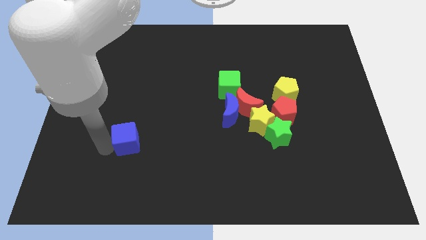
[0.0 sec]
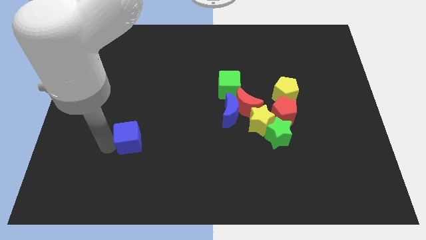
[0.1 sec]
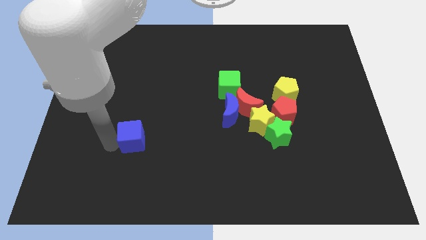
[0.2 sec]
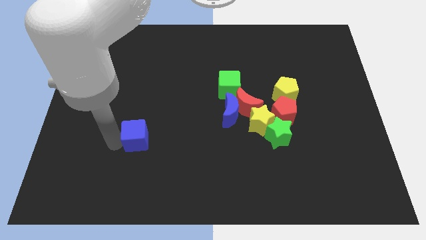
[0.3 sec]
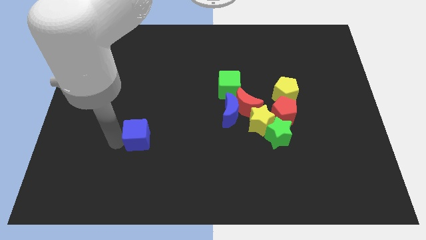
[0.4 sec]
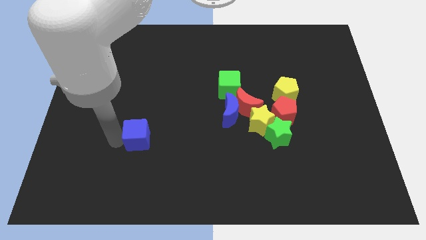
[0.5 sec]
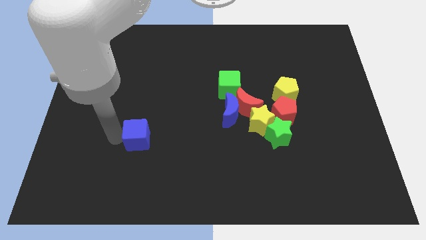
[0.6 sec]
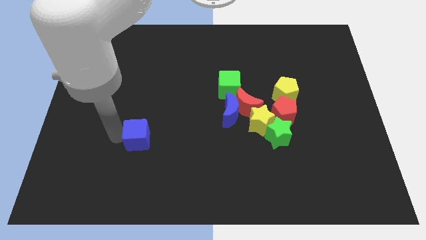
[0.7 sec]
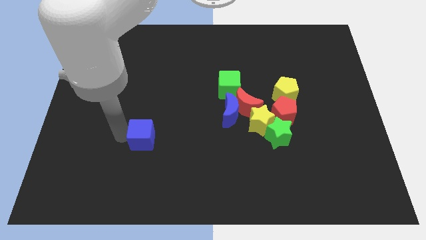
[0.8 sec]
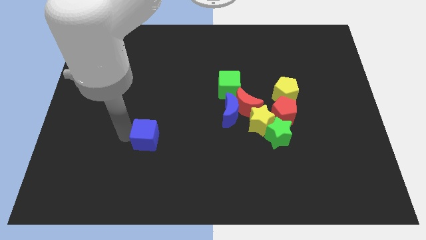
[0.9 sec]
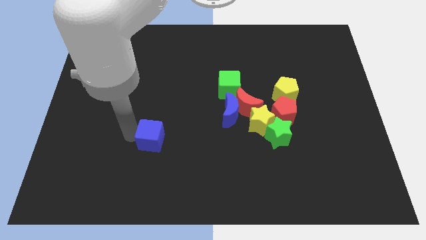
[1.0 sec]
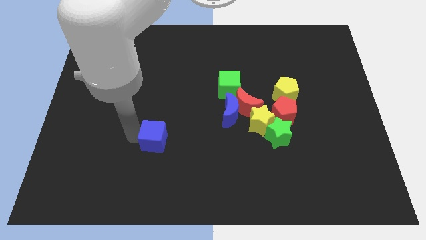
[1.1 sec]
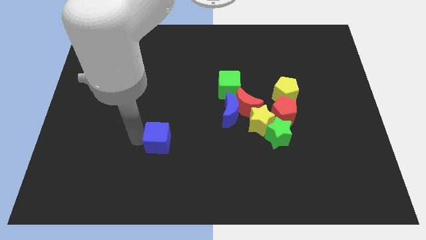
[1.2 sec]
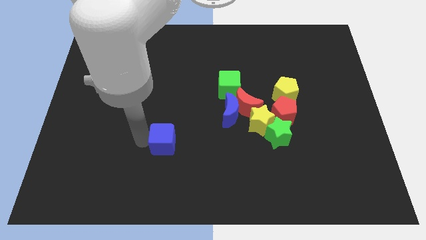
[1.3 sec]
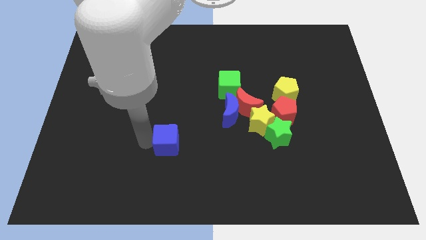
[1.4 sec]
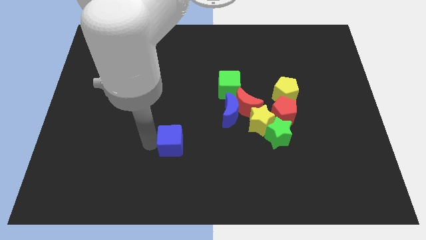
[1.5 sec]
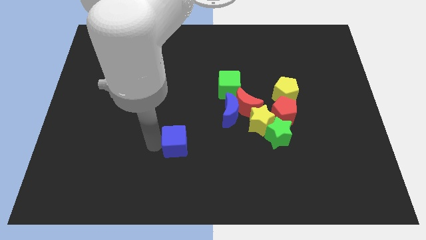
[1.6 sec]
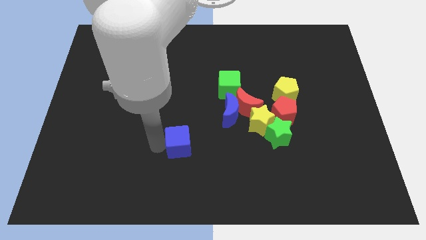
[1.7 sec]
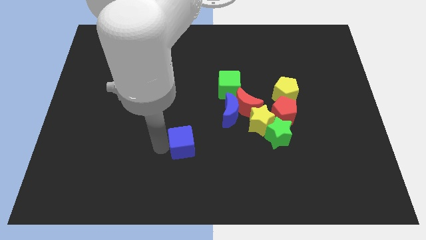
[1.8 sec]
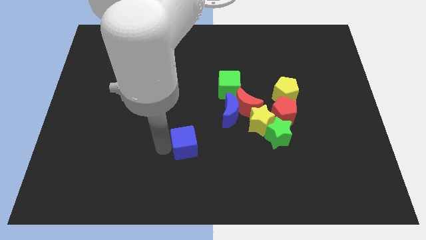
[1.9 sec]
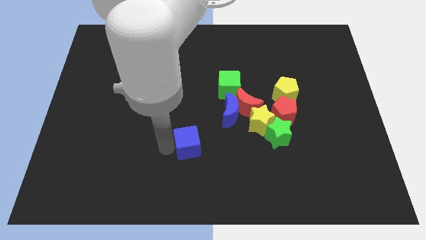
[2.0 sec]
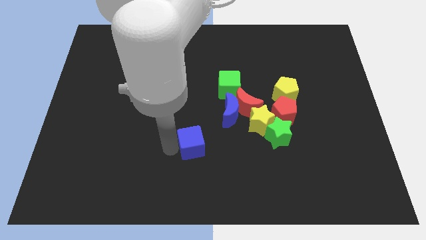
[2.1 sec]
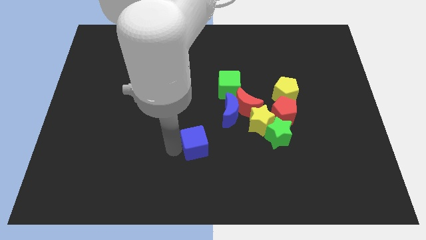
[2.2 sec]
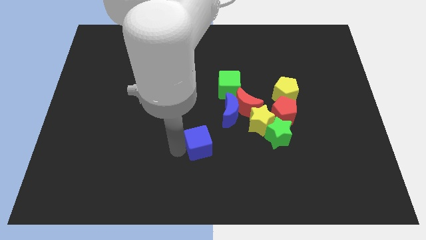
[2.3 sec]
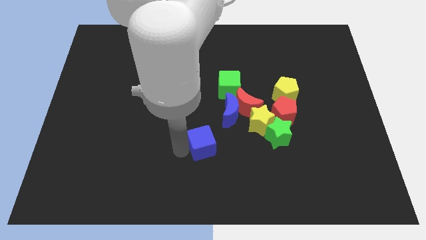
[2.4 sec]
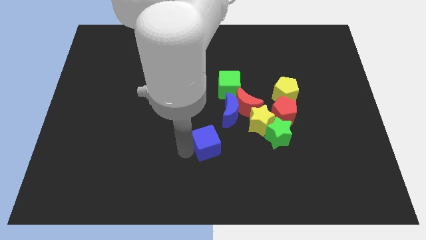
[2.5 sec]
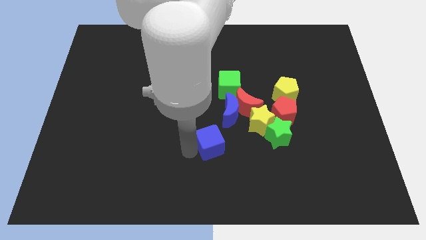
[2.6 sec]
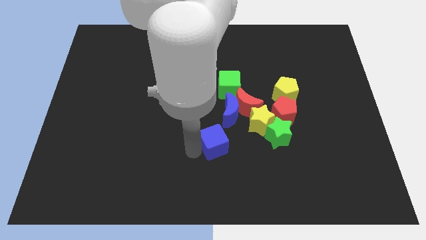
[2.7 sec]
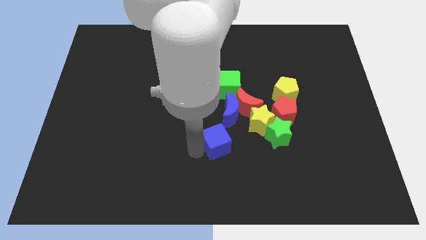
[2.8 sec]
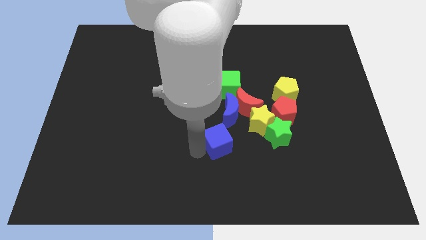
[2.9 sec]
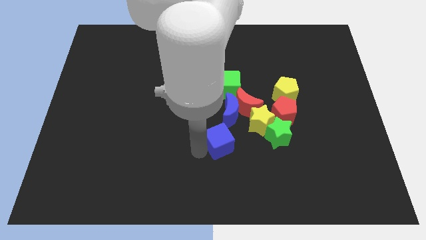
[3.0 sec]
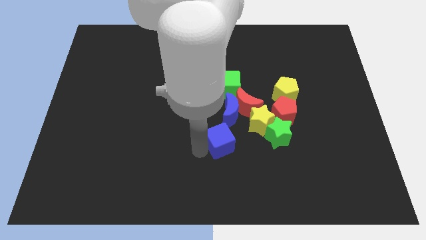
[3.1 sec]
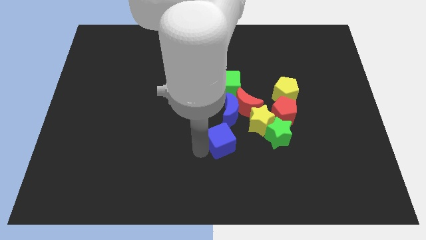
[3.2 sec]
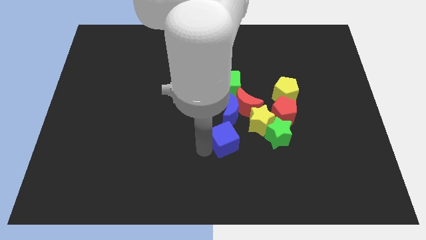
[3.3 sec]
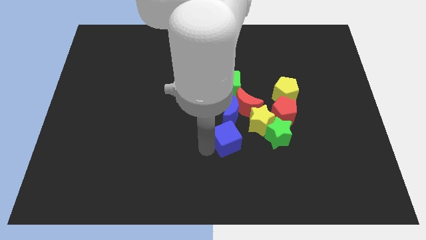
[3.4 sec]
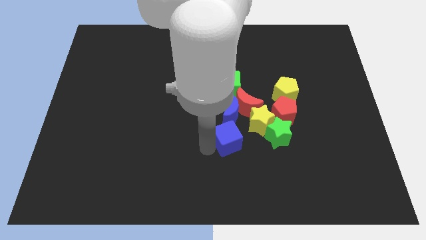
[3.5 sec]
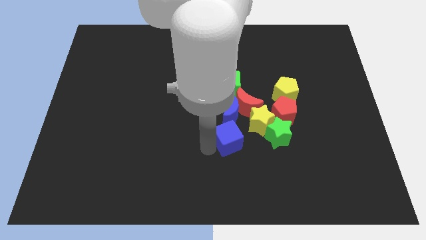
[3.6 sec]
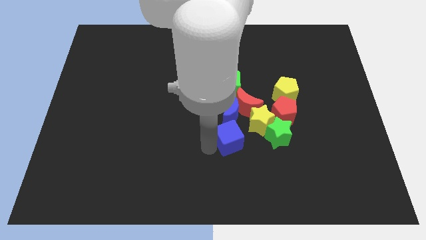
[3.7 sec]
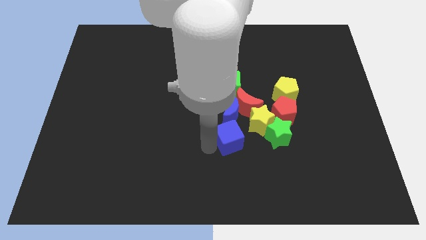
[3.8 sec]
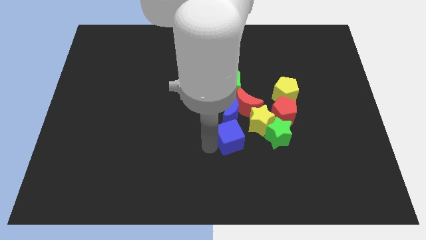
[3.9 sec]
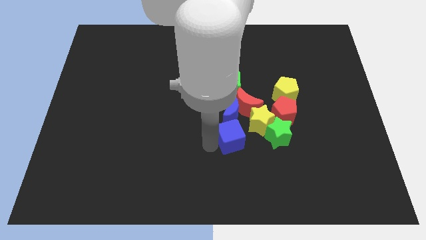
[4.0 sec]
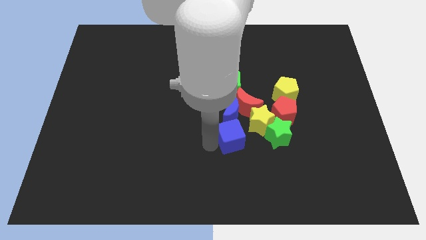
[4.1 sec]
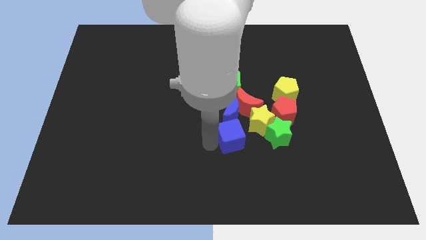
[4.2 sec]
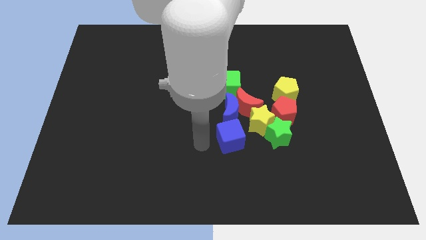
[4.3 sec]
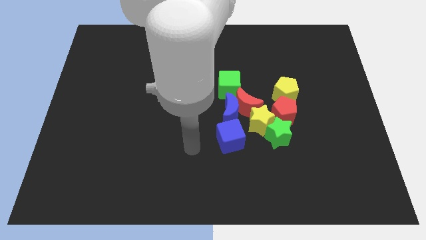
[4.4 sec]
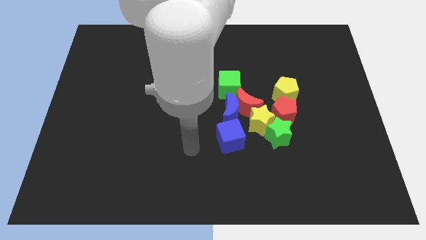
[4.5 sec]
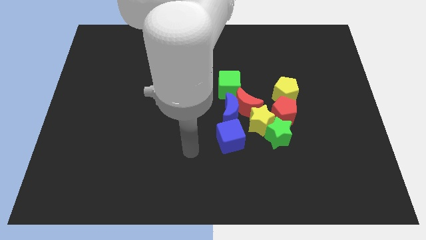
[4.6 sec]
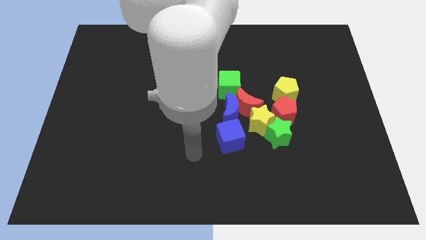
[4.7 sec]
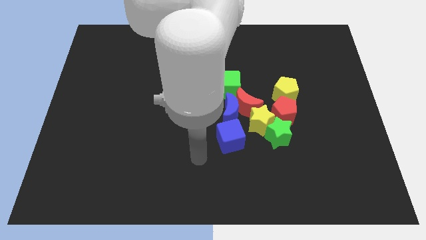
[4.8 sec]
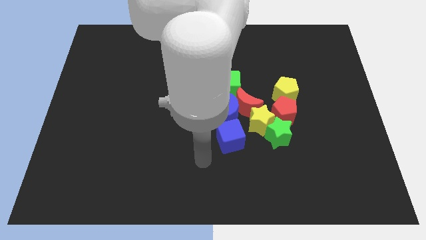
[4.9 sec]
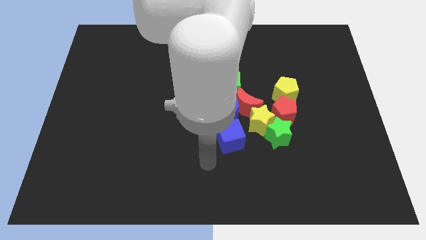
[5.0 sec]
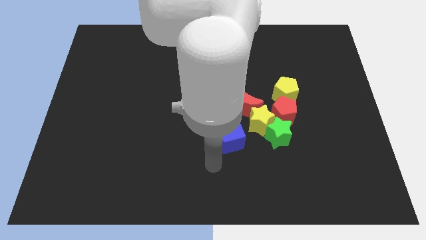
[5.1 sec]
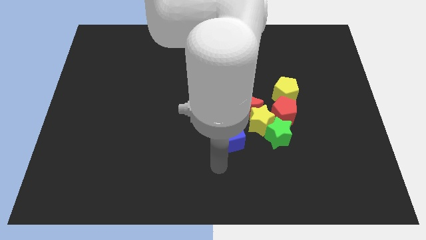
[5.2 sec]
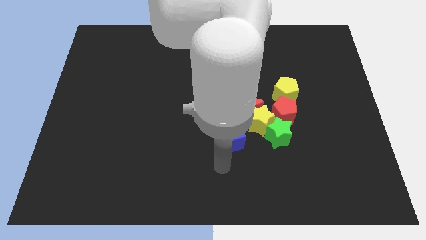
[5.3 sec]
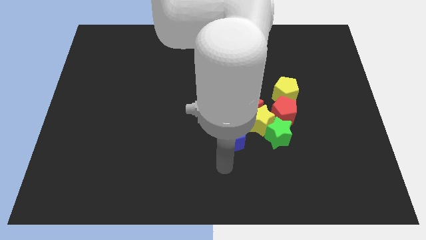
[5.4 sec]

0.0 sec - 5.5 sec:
push the blue cube to the bottom of the blue crescent

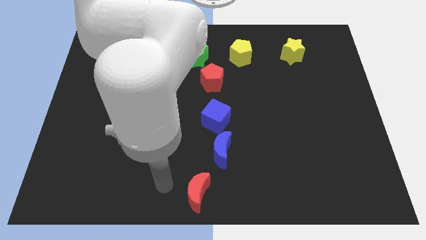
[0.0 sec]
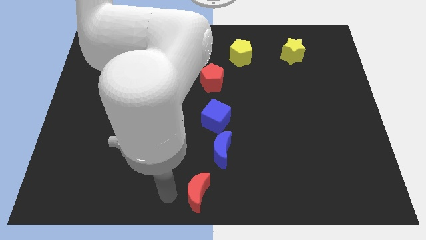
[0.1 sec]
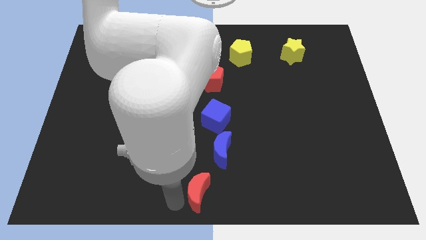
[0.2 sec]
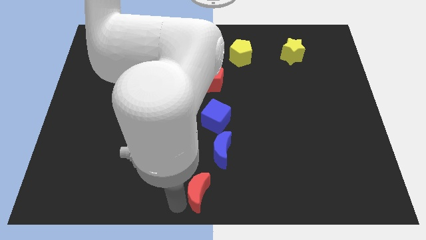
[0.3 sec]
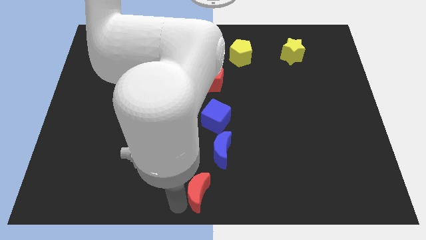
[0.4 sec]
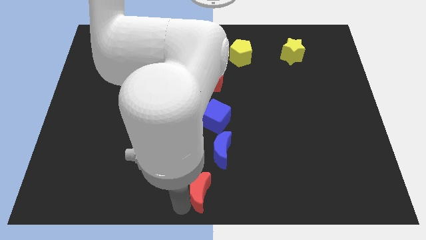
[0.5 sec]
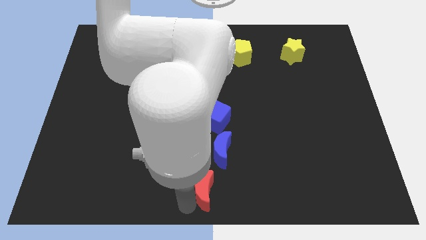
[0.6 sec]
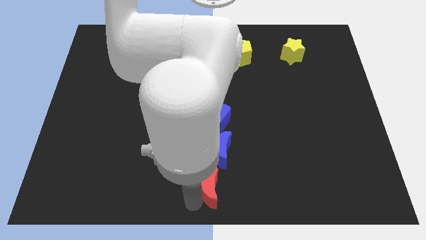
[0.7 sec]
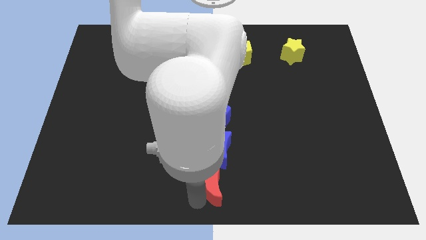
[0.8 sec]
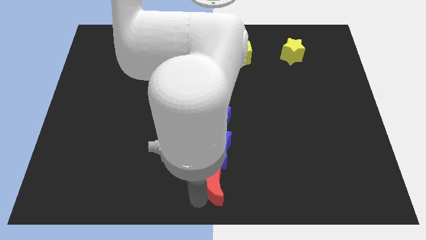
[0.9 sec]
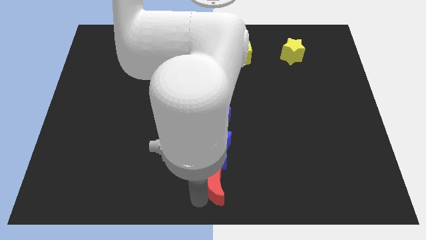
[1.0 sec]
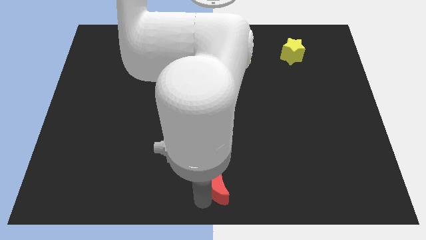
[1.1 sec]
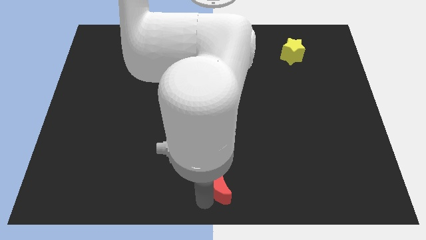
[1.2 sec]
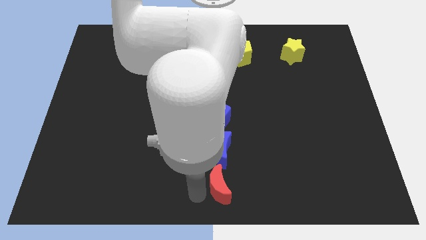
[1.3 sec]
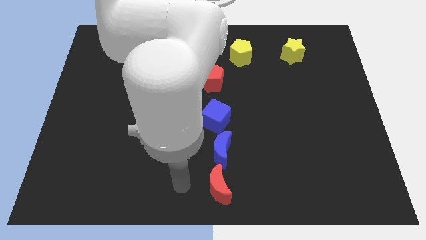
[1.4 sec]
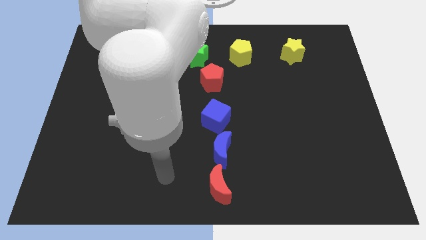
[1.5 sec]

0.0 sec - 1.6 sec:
push the red moon to the bottom of blue moon

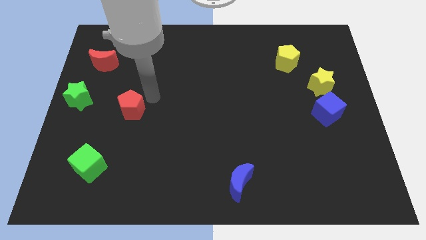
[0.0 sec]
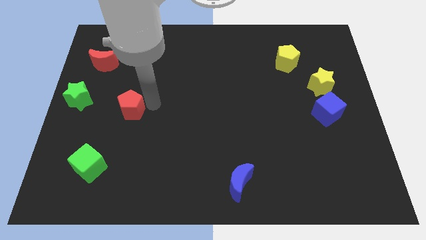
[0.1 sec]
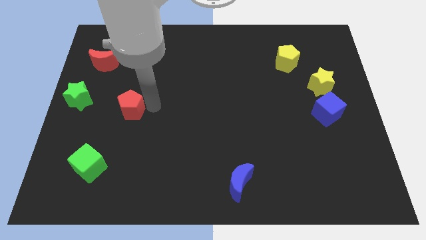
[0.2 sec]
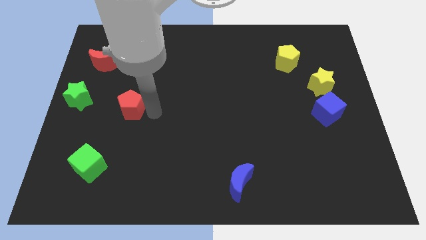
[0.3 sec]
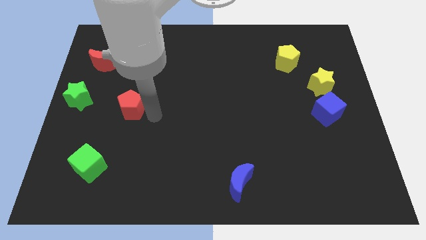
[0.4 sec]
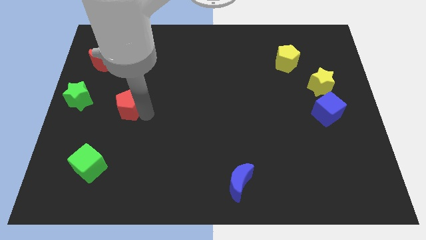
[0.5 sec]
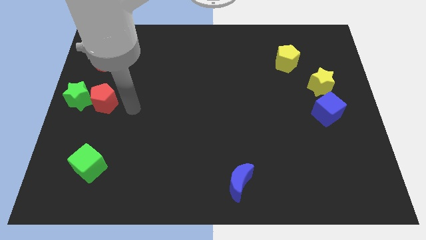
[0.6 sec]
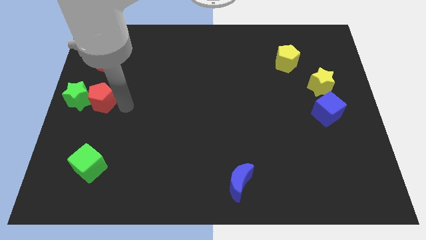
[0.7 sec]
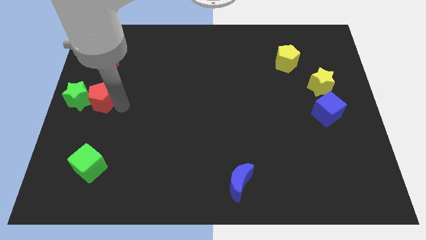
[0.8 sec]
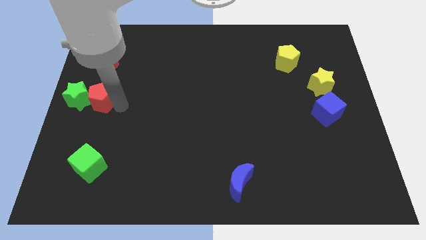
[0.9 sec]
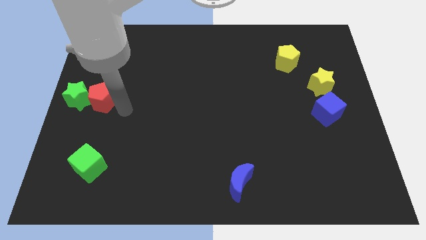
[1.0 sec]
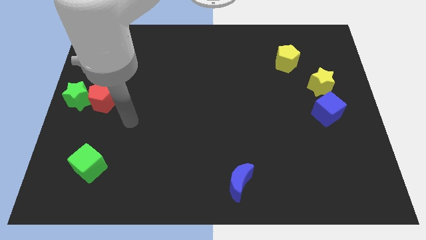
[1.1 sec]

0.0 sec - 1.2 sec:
attach the red pentagon to the green star

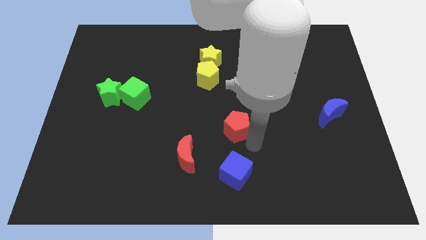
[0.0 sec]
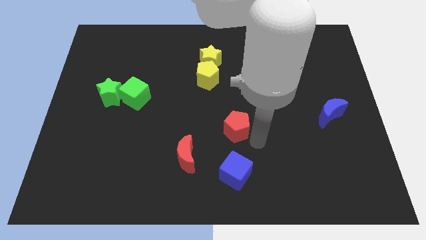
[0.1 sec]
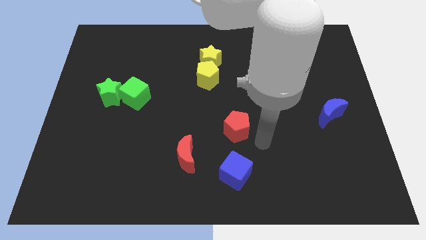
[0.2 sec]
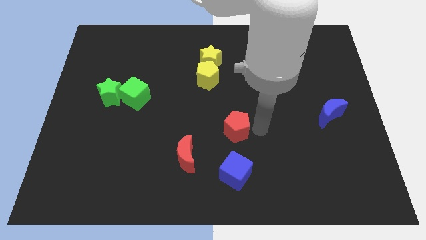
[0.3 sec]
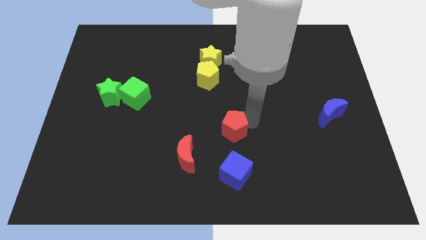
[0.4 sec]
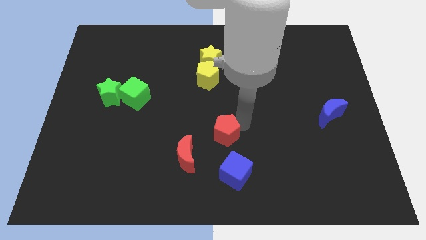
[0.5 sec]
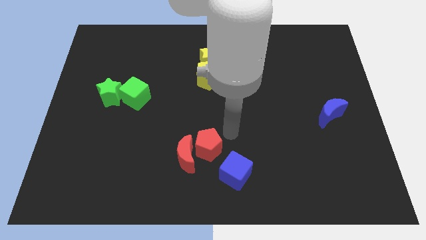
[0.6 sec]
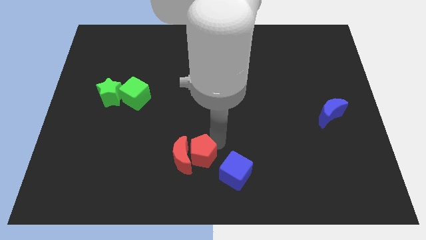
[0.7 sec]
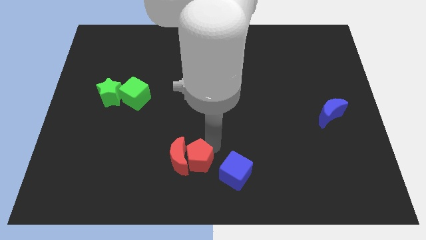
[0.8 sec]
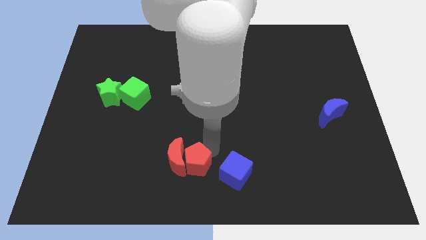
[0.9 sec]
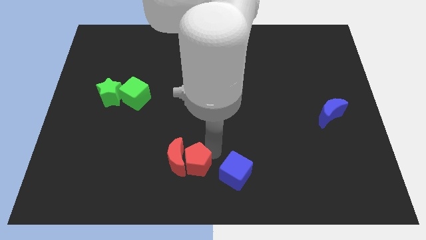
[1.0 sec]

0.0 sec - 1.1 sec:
push the red pentagon to the right of the red moon
